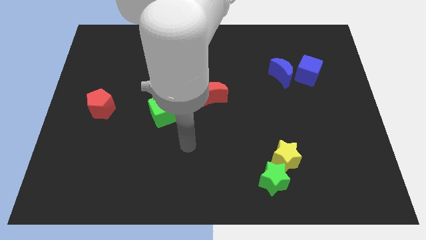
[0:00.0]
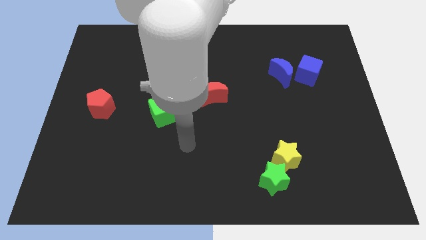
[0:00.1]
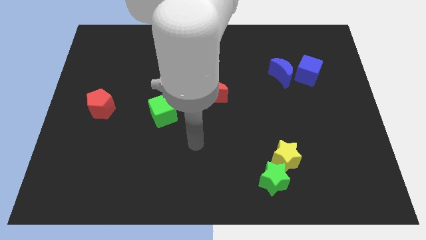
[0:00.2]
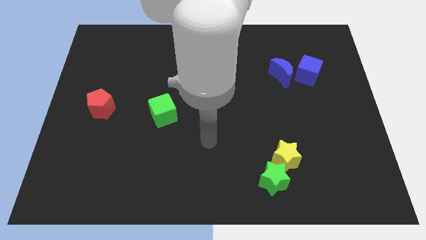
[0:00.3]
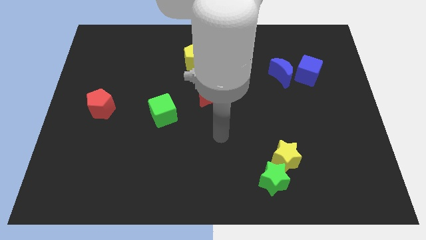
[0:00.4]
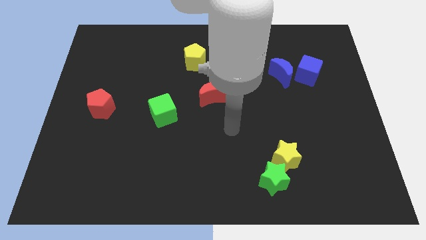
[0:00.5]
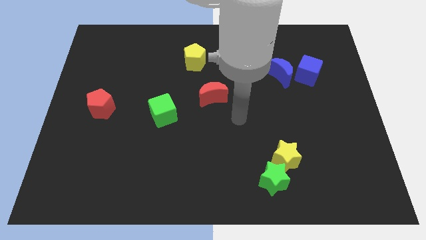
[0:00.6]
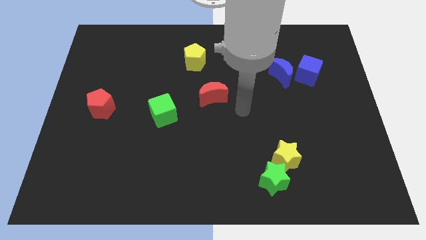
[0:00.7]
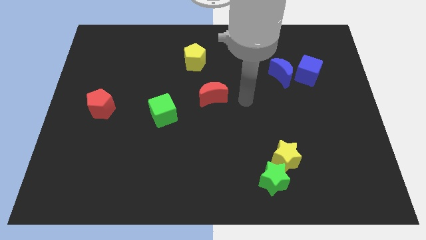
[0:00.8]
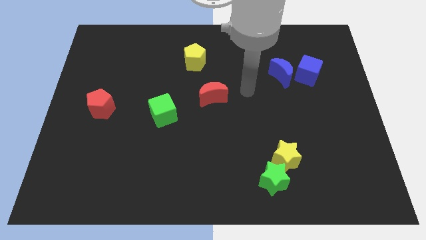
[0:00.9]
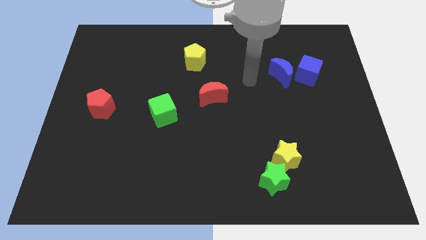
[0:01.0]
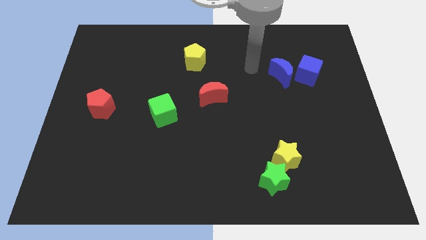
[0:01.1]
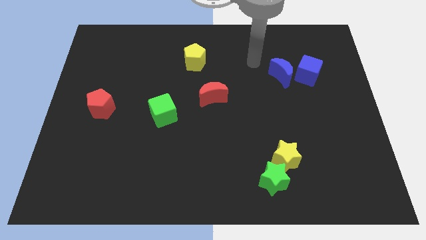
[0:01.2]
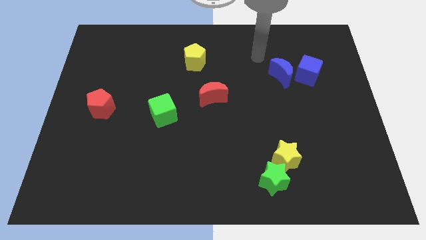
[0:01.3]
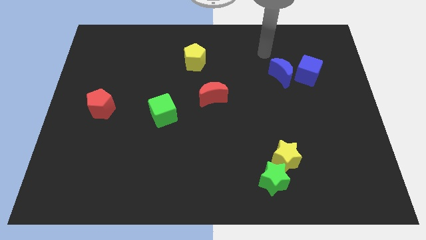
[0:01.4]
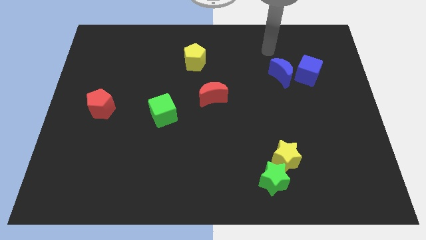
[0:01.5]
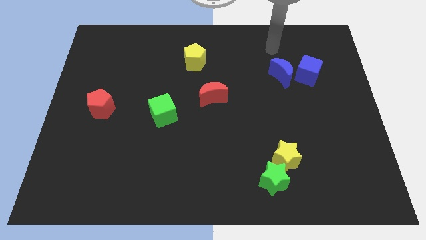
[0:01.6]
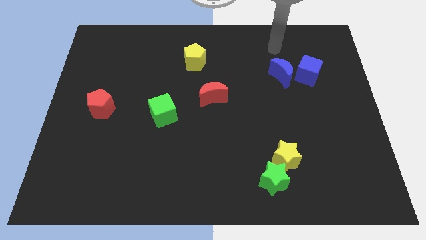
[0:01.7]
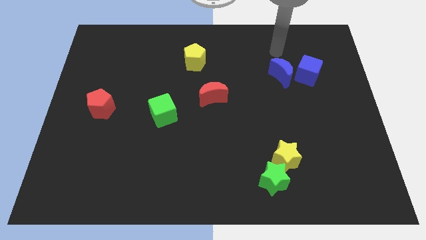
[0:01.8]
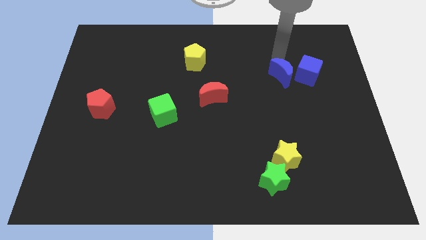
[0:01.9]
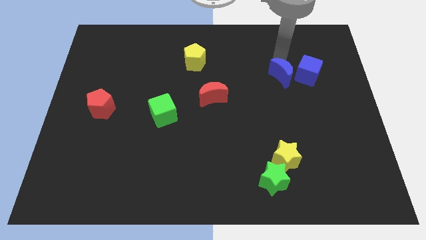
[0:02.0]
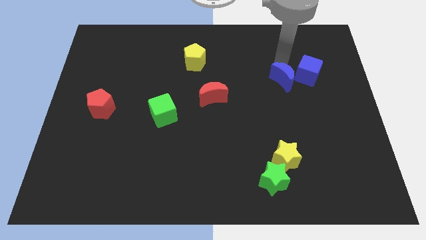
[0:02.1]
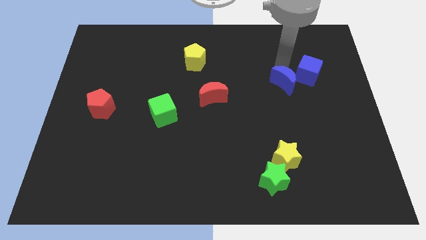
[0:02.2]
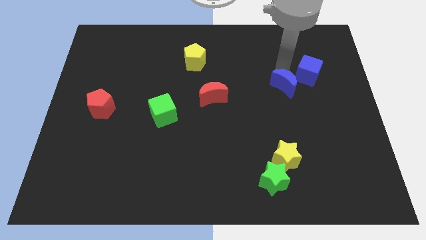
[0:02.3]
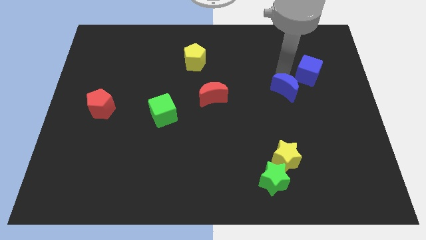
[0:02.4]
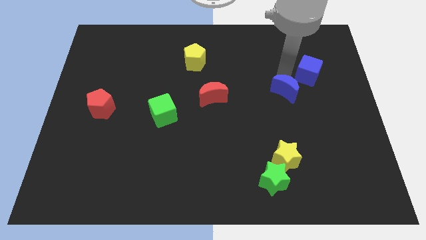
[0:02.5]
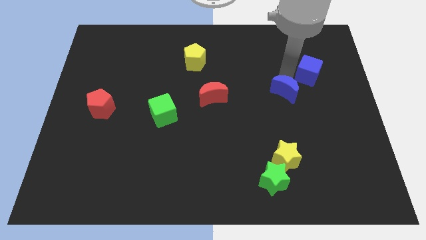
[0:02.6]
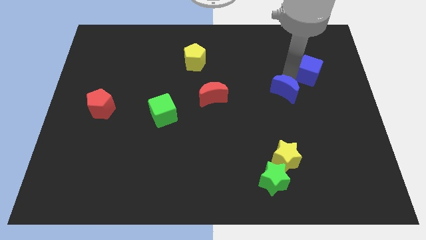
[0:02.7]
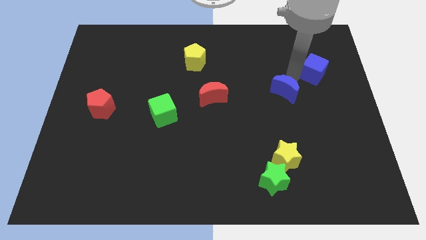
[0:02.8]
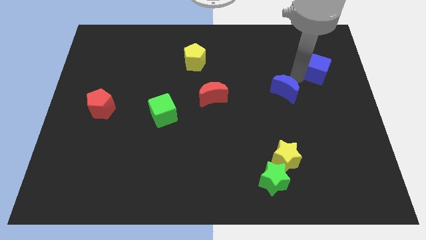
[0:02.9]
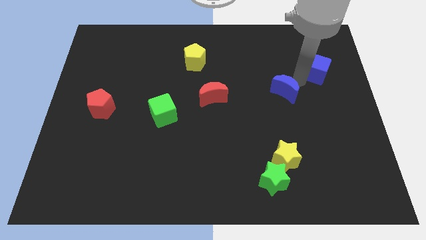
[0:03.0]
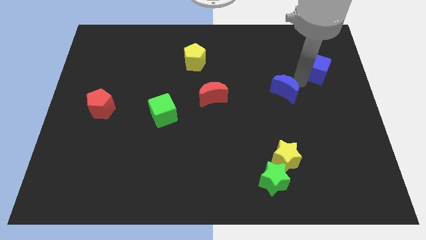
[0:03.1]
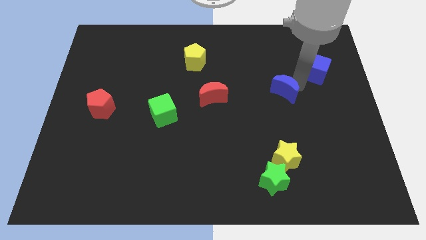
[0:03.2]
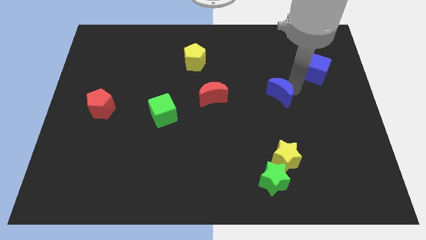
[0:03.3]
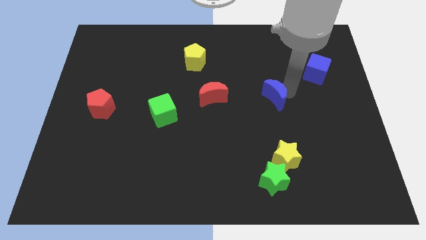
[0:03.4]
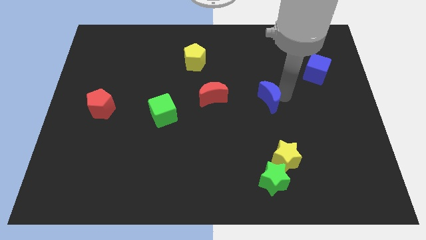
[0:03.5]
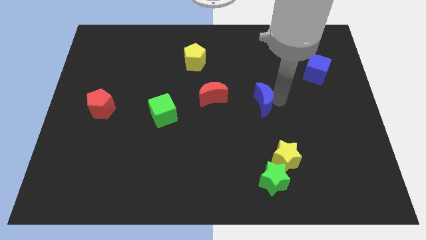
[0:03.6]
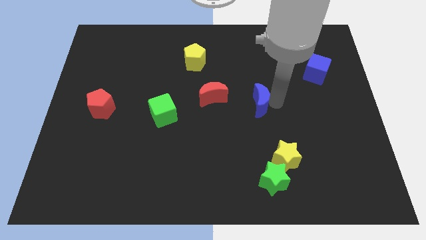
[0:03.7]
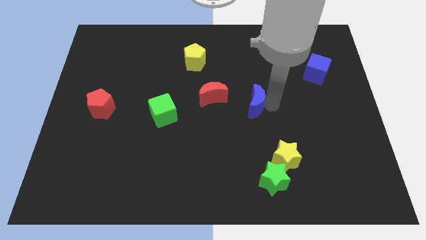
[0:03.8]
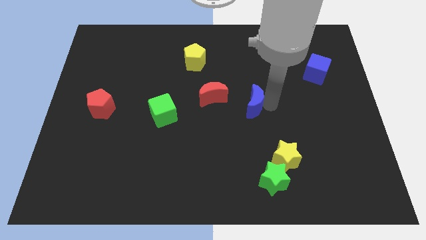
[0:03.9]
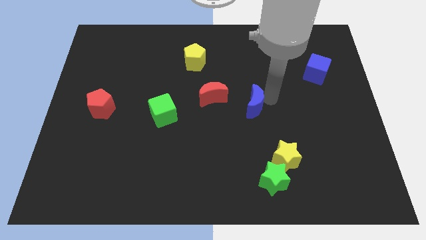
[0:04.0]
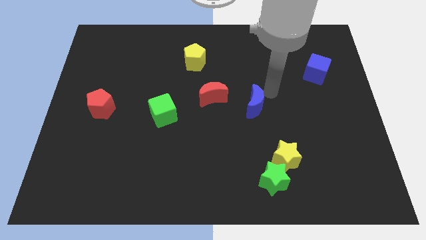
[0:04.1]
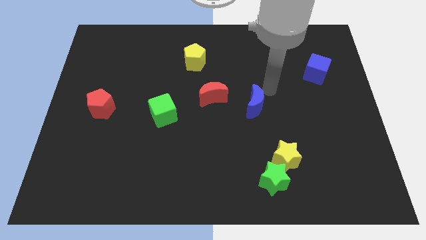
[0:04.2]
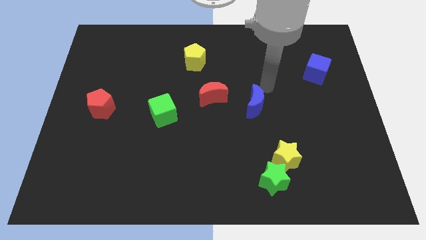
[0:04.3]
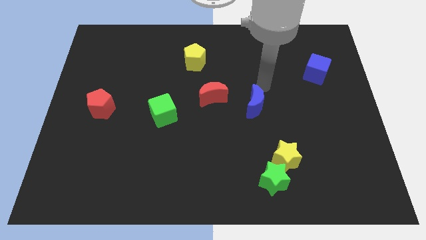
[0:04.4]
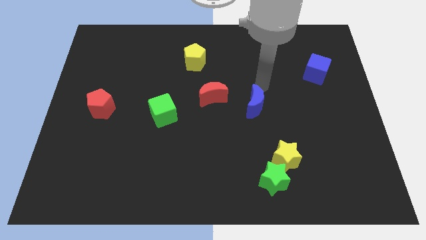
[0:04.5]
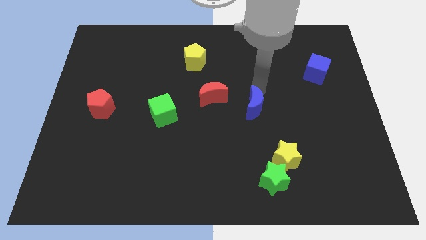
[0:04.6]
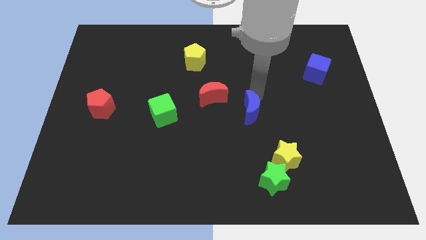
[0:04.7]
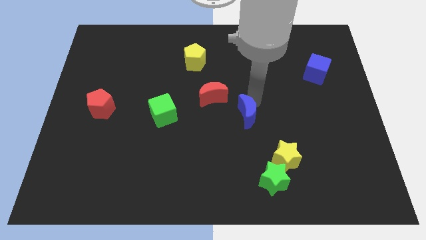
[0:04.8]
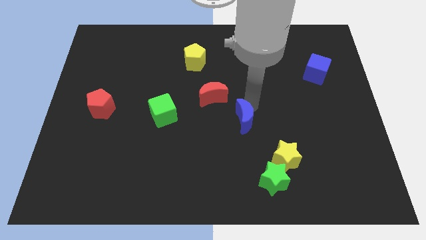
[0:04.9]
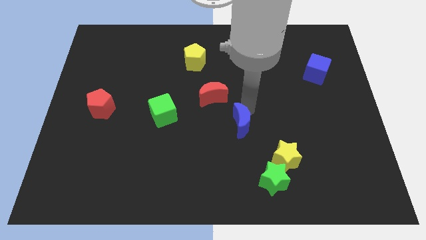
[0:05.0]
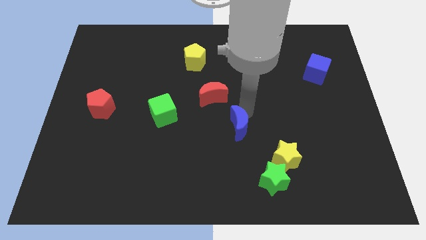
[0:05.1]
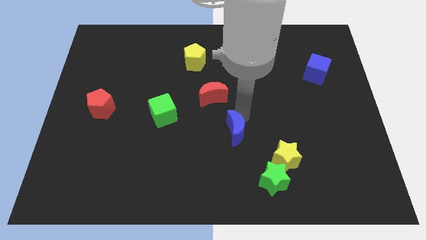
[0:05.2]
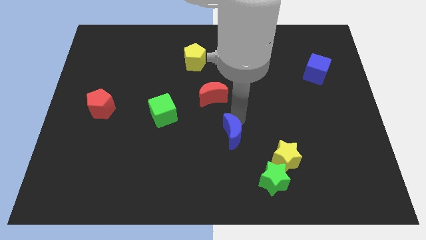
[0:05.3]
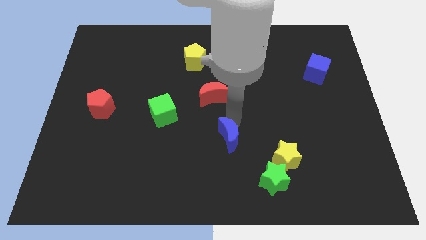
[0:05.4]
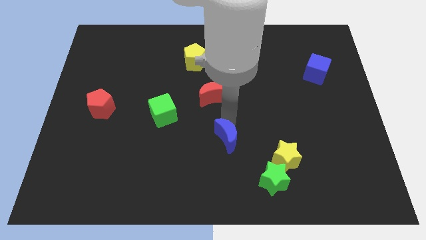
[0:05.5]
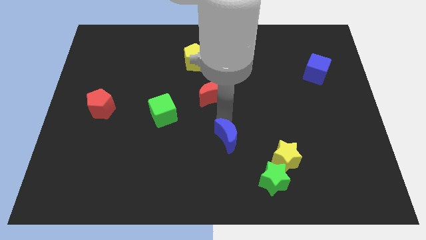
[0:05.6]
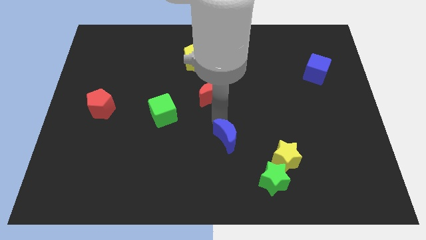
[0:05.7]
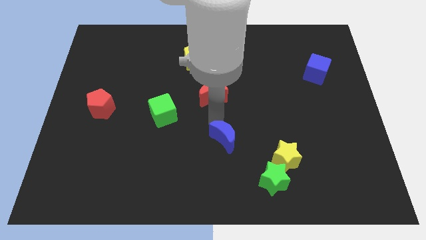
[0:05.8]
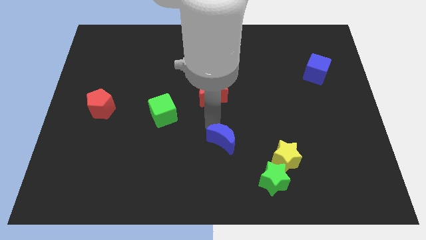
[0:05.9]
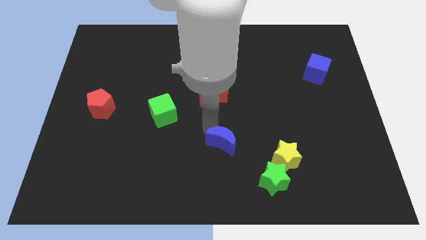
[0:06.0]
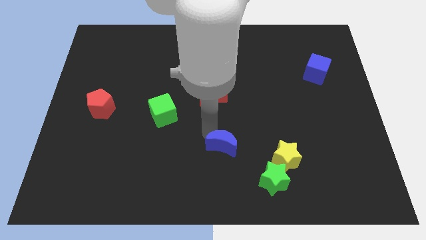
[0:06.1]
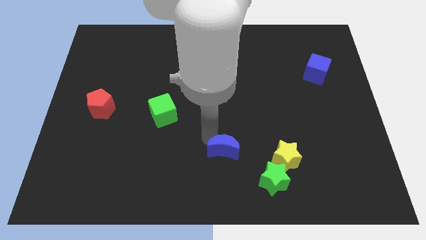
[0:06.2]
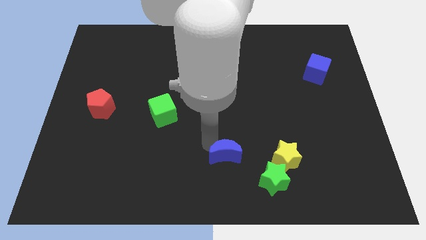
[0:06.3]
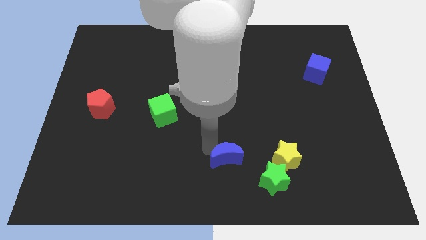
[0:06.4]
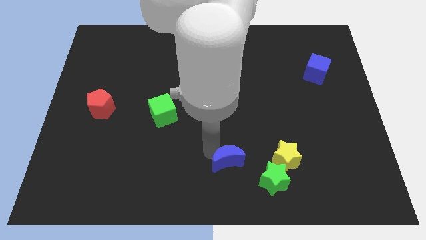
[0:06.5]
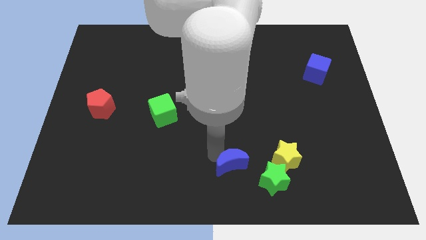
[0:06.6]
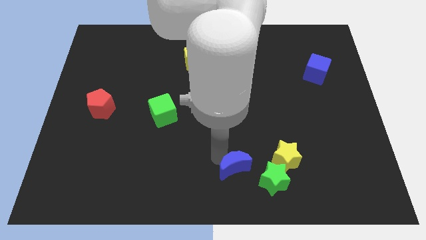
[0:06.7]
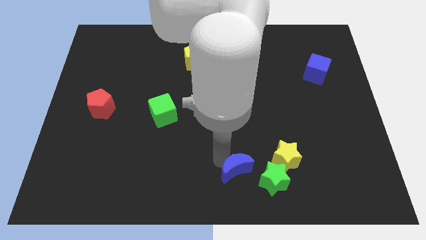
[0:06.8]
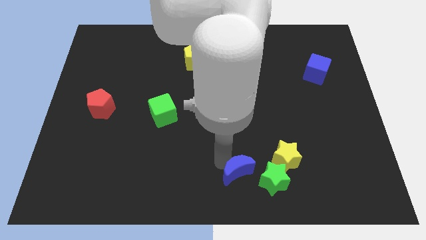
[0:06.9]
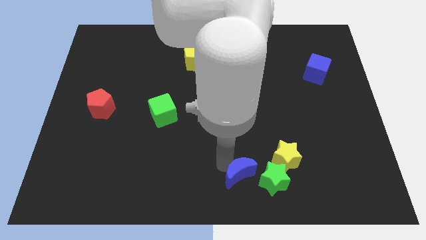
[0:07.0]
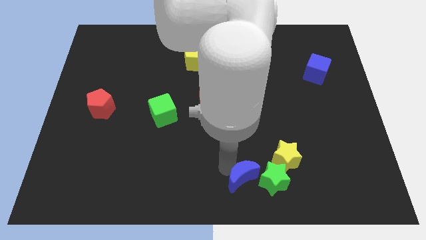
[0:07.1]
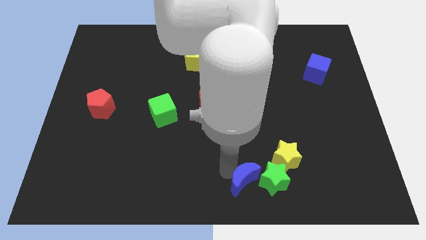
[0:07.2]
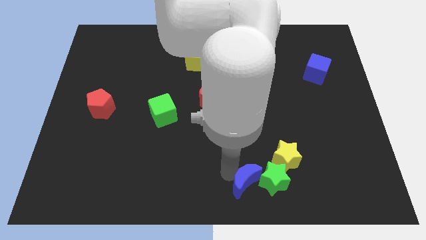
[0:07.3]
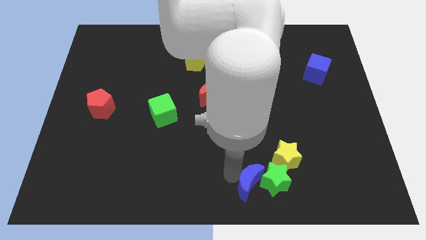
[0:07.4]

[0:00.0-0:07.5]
slide the blue moon to the green star

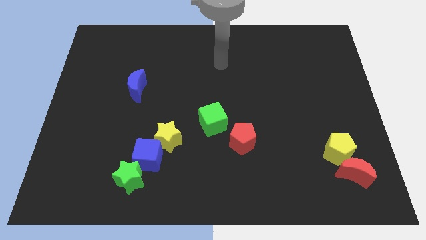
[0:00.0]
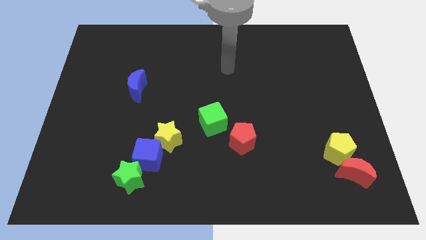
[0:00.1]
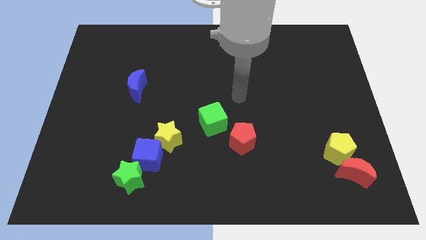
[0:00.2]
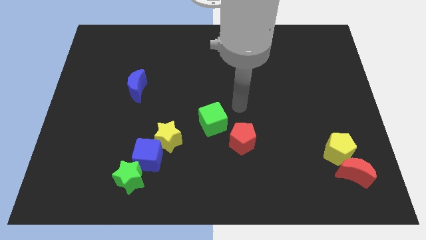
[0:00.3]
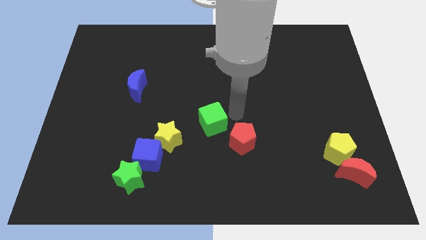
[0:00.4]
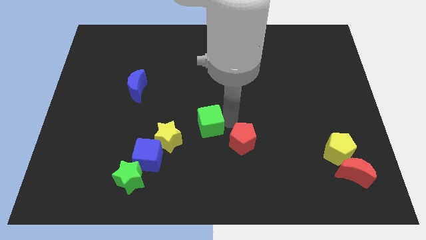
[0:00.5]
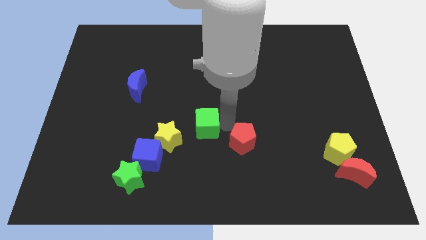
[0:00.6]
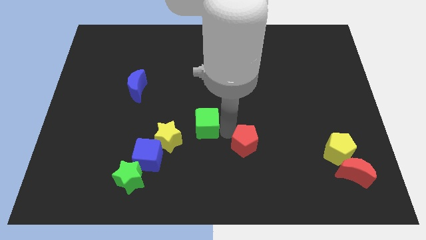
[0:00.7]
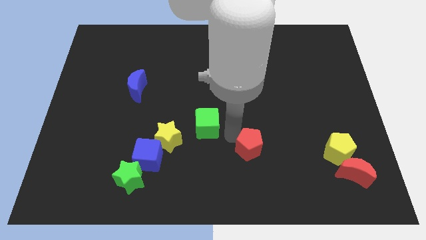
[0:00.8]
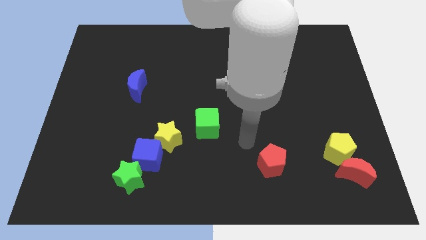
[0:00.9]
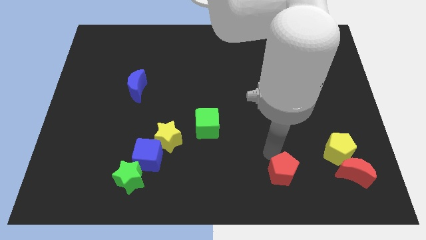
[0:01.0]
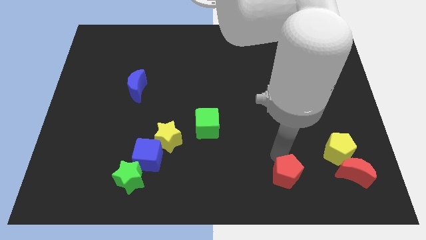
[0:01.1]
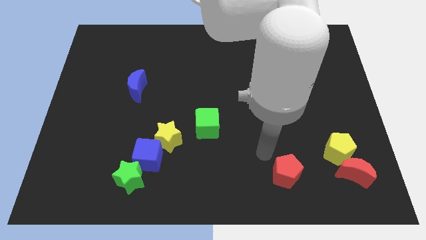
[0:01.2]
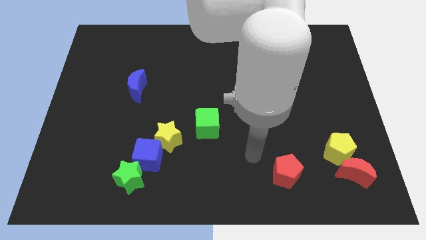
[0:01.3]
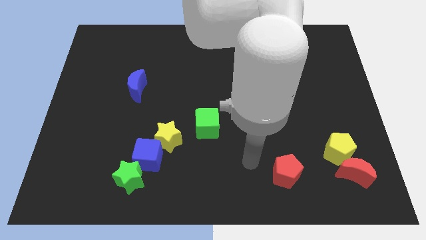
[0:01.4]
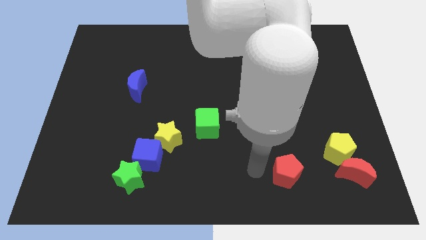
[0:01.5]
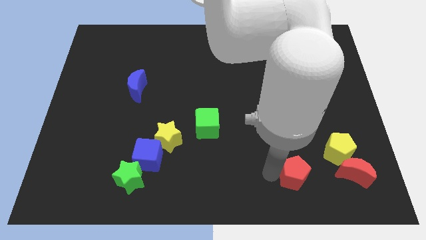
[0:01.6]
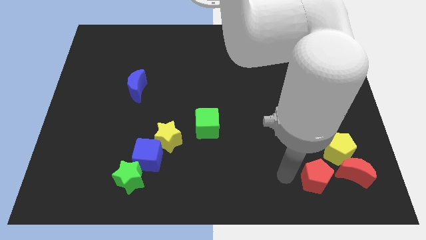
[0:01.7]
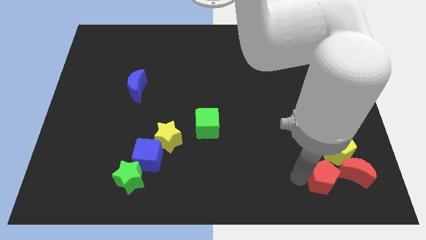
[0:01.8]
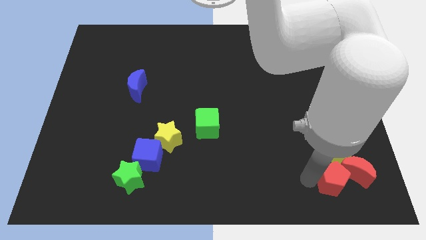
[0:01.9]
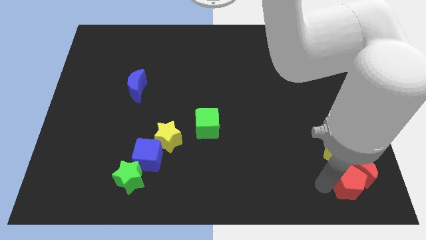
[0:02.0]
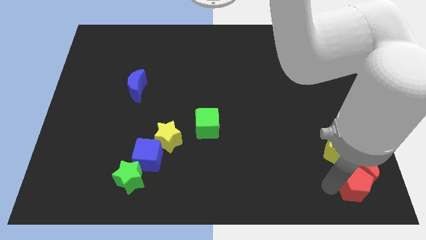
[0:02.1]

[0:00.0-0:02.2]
move the red pentagon towards the red moon
